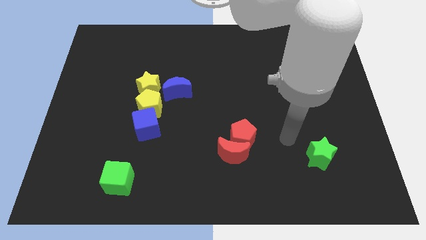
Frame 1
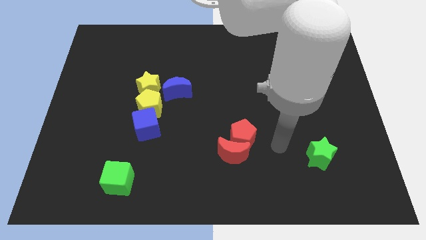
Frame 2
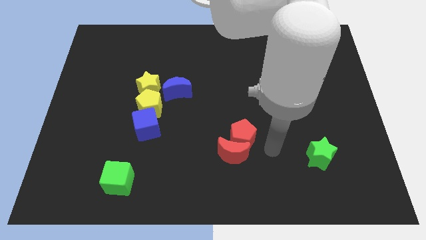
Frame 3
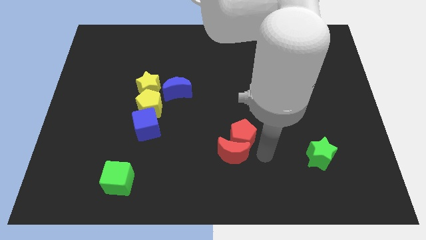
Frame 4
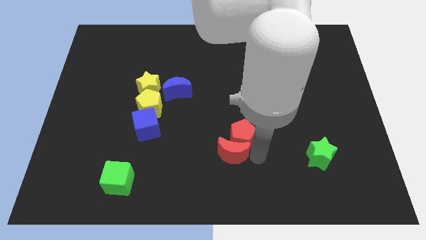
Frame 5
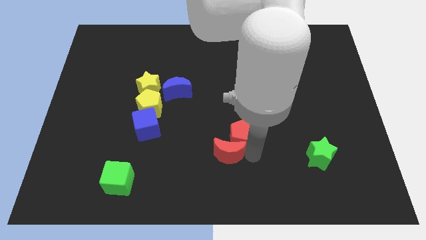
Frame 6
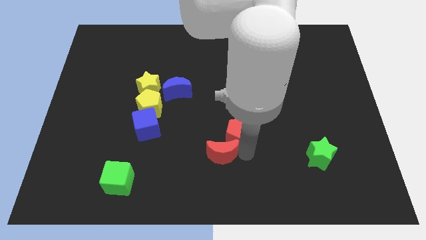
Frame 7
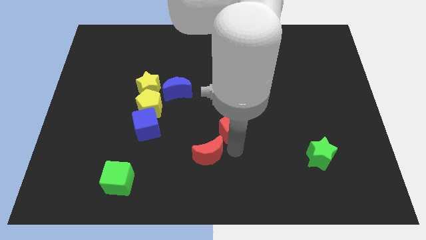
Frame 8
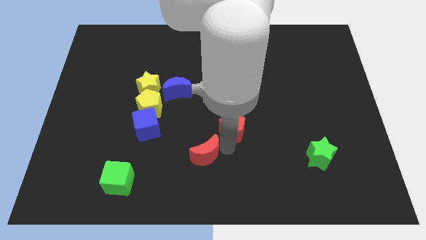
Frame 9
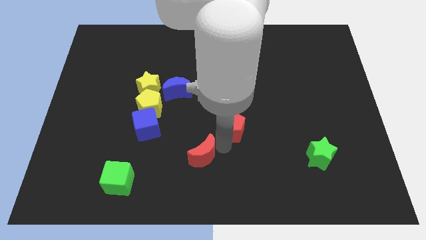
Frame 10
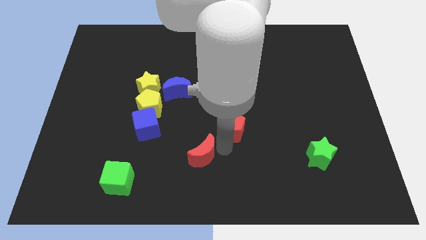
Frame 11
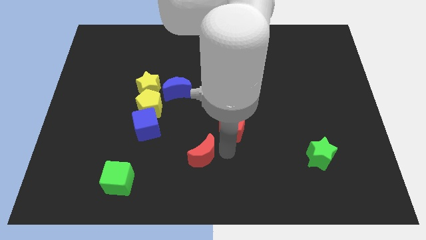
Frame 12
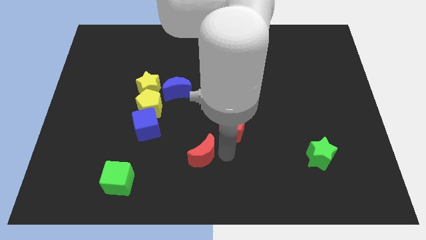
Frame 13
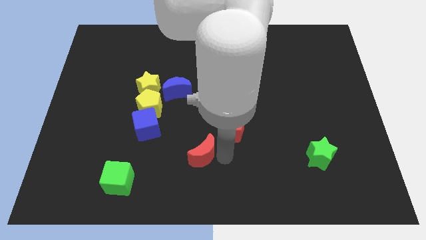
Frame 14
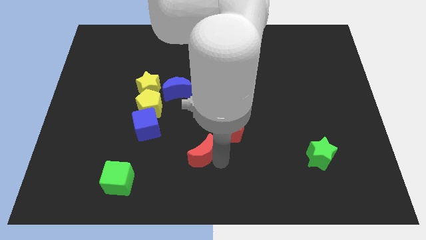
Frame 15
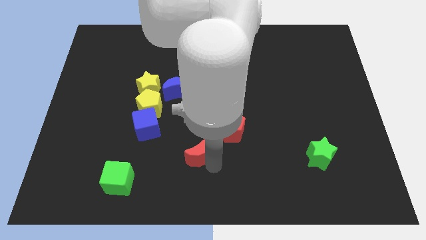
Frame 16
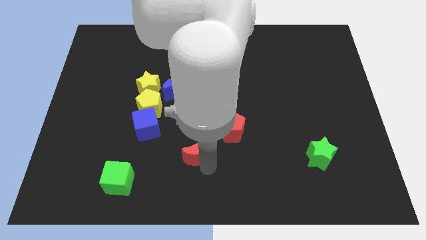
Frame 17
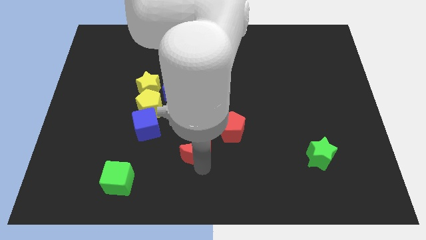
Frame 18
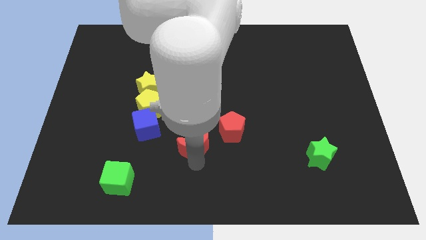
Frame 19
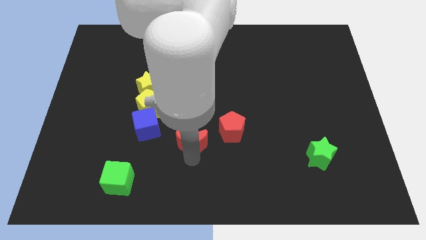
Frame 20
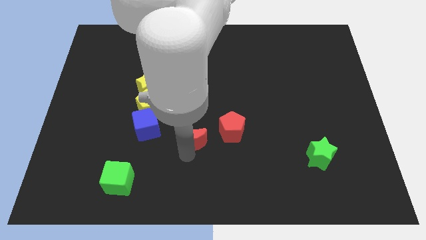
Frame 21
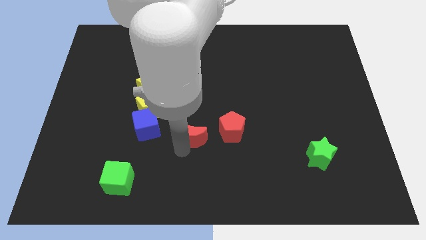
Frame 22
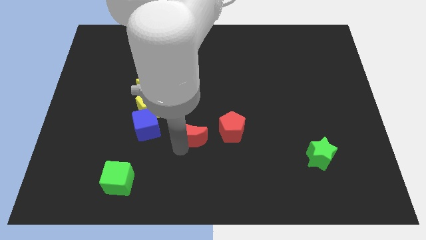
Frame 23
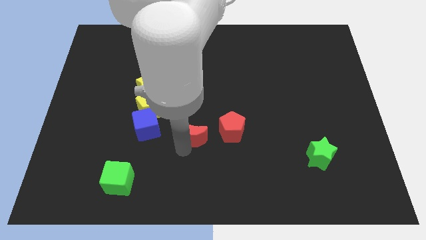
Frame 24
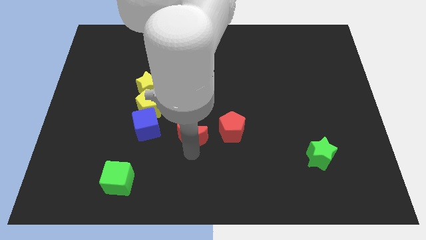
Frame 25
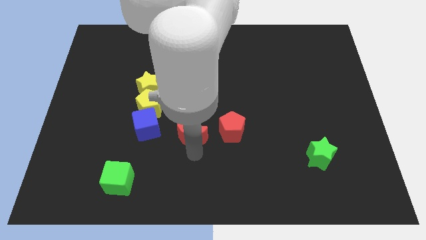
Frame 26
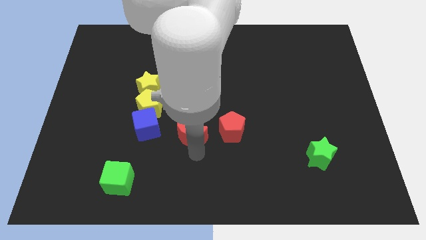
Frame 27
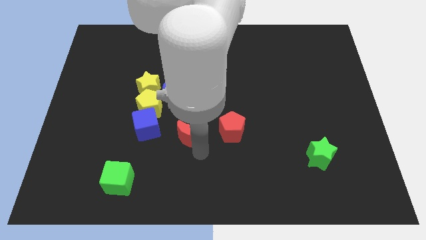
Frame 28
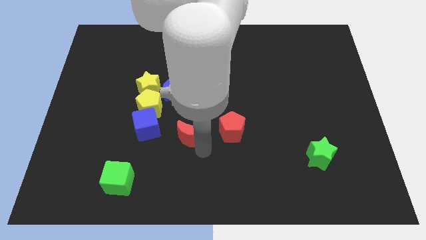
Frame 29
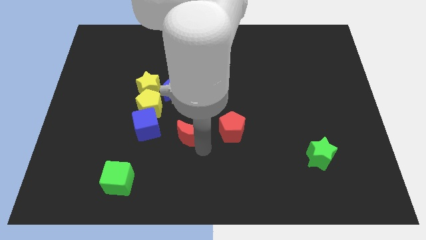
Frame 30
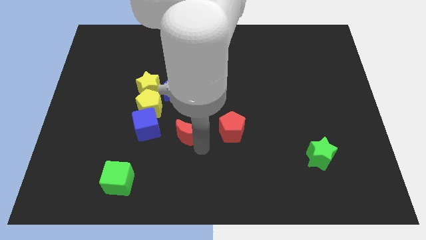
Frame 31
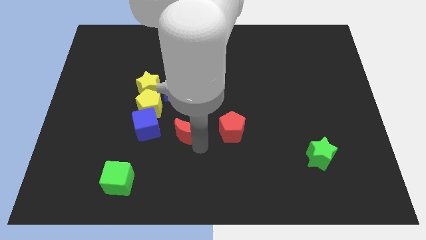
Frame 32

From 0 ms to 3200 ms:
separate the red crescent and red pentagon

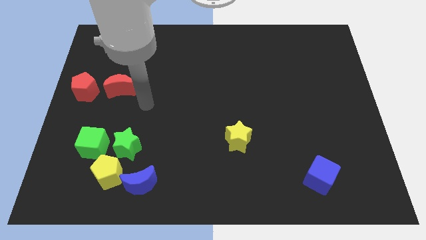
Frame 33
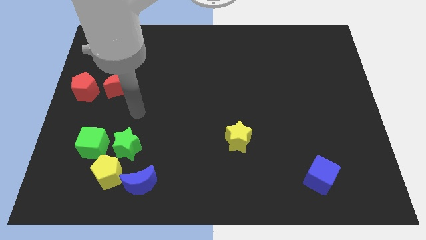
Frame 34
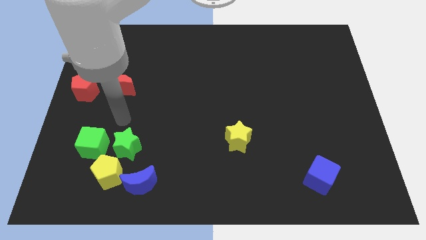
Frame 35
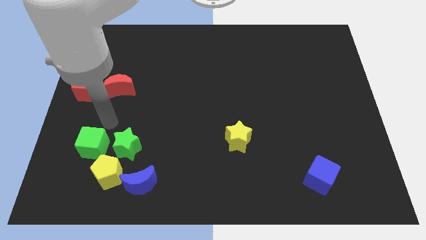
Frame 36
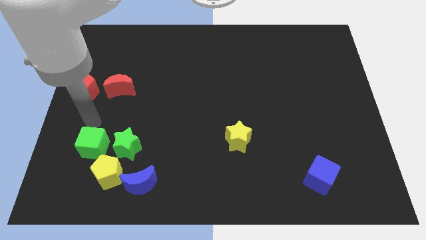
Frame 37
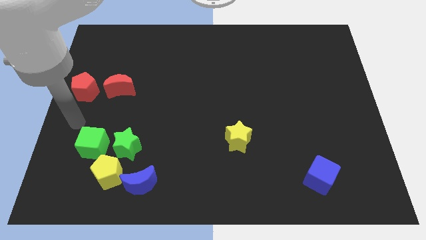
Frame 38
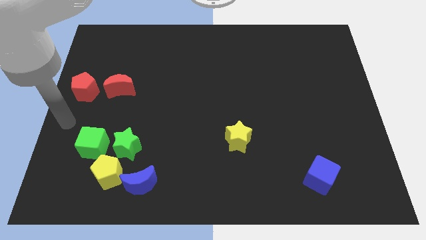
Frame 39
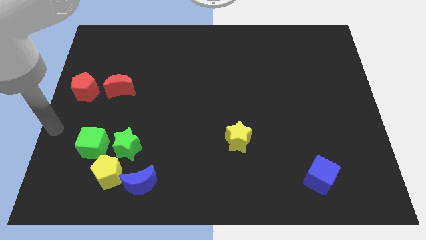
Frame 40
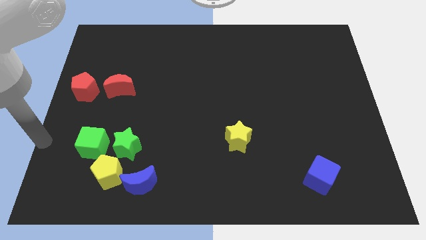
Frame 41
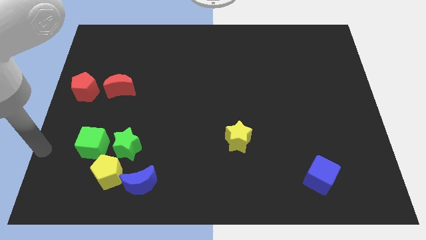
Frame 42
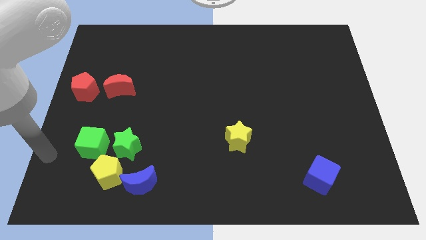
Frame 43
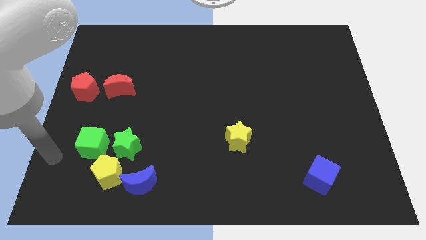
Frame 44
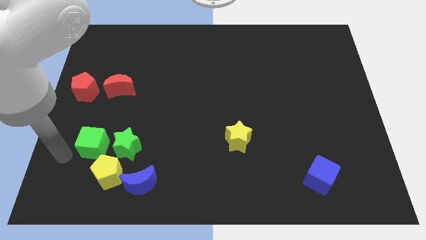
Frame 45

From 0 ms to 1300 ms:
point your arm at the left of the green cube

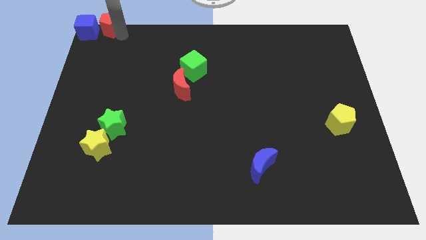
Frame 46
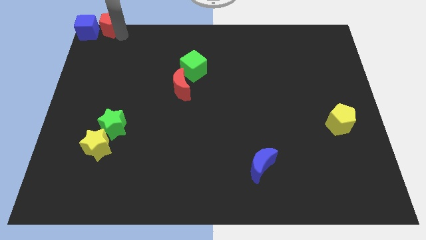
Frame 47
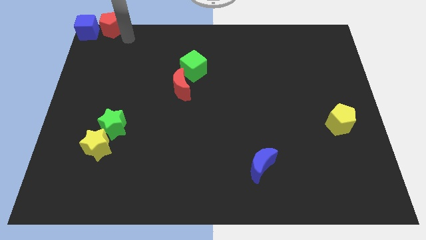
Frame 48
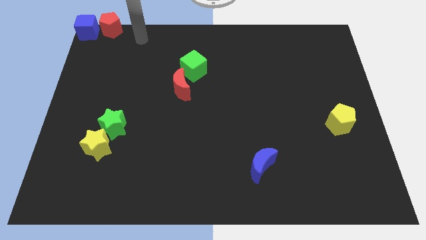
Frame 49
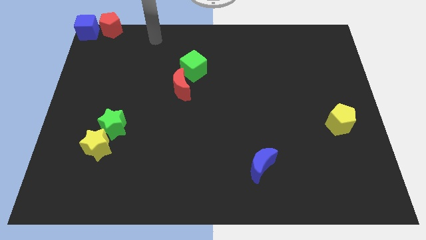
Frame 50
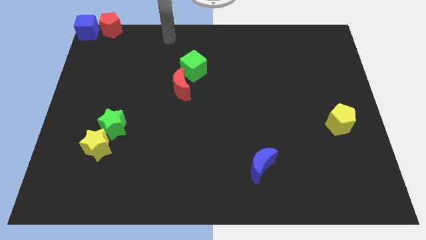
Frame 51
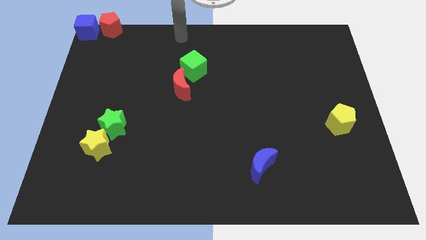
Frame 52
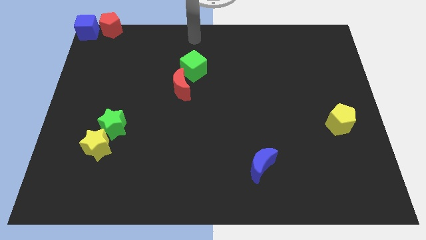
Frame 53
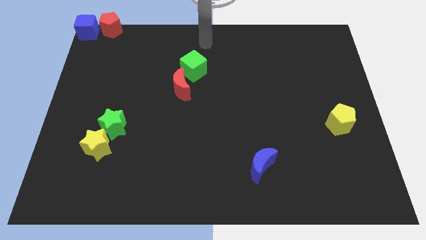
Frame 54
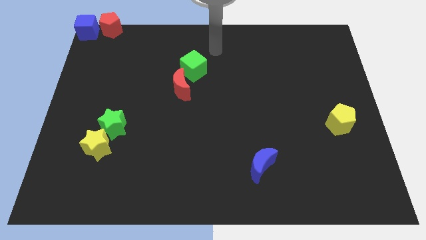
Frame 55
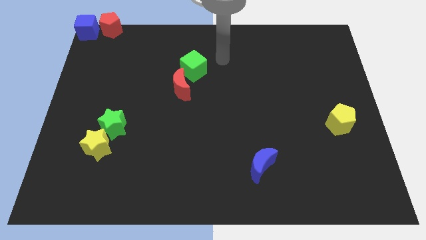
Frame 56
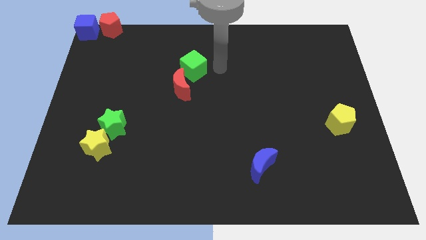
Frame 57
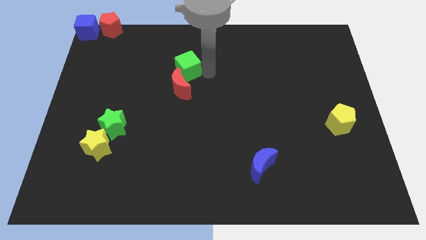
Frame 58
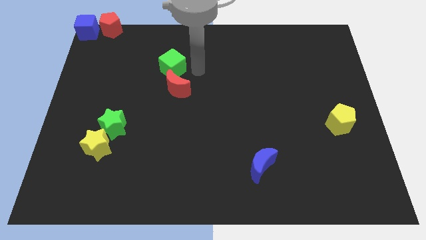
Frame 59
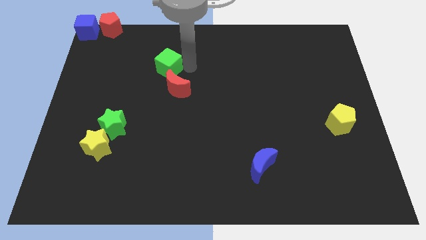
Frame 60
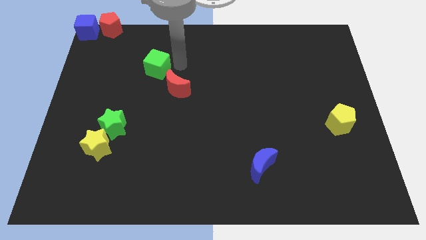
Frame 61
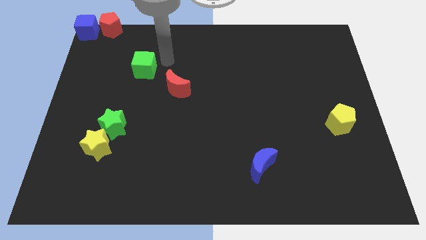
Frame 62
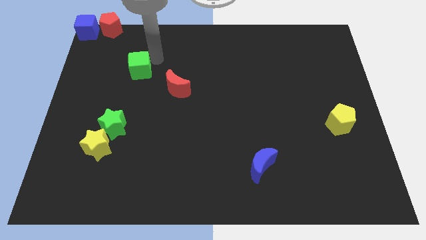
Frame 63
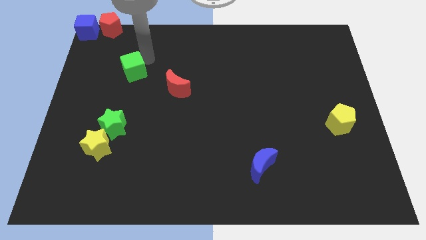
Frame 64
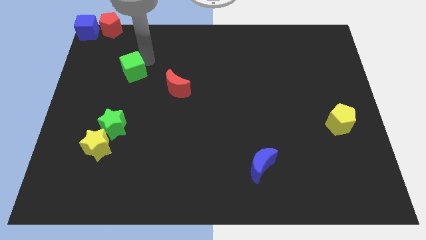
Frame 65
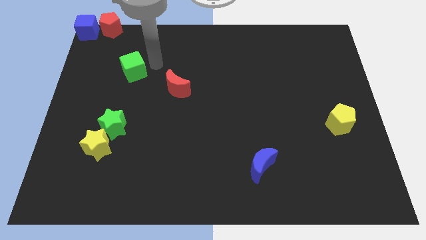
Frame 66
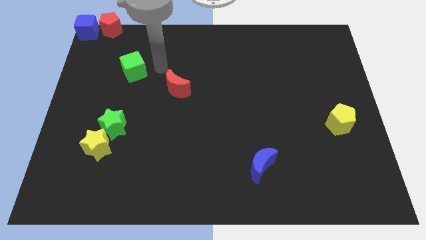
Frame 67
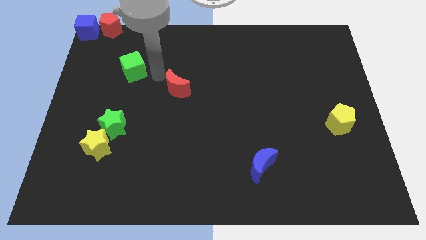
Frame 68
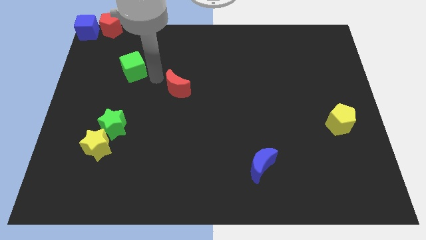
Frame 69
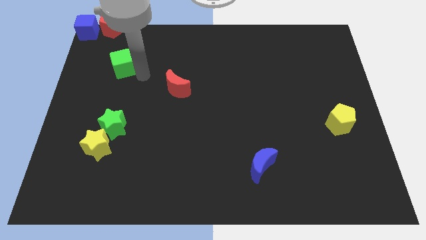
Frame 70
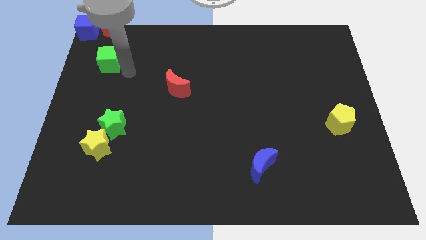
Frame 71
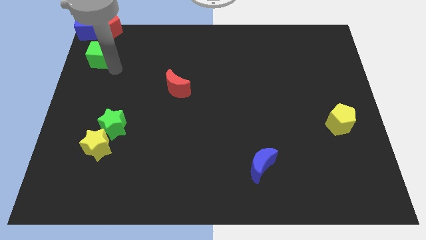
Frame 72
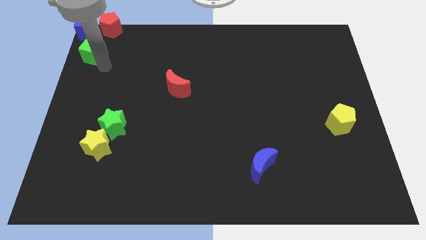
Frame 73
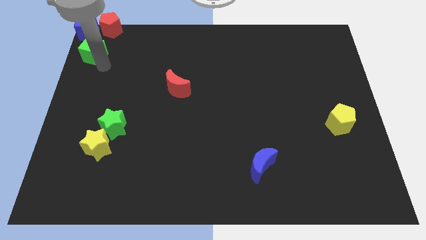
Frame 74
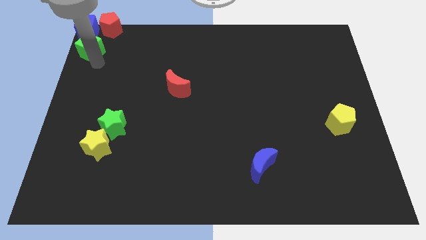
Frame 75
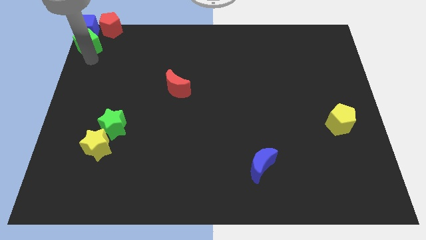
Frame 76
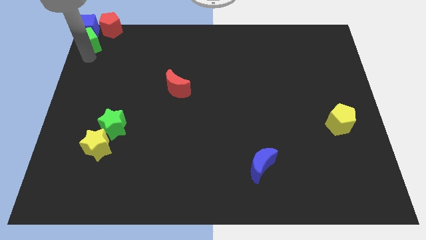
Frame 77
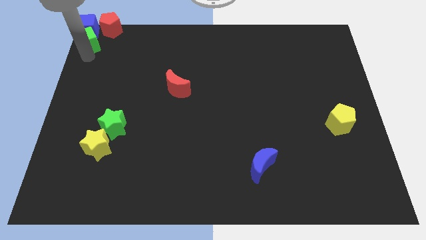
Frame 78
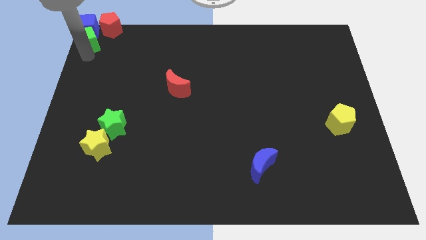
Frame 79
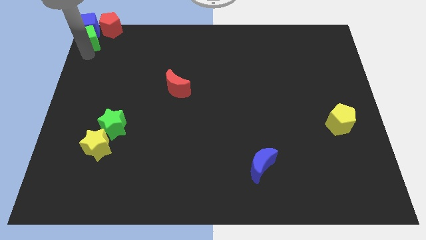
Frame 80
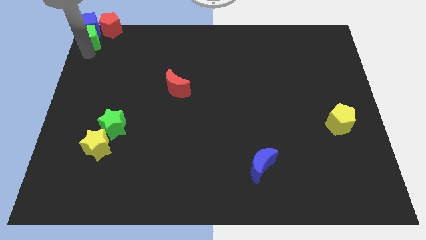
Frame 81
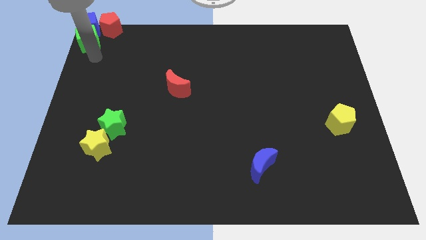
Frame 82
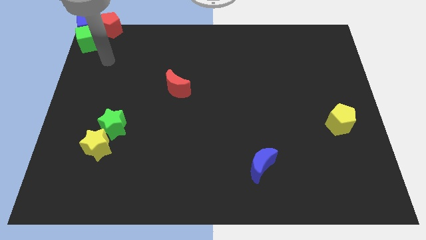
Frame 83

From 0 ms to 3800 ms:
move green cube into blue cube

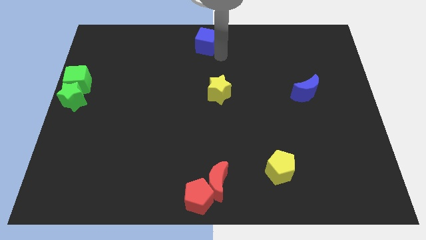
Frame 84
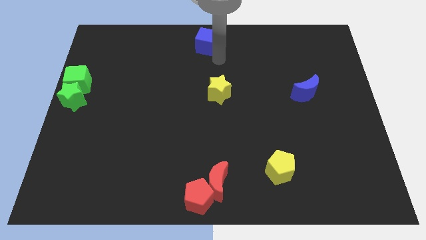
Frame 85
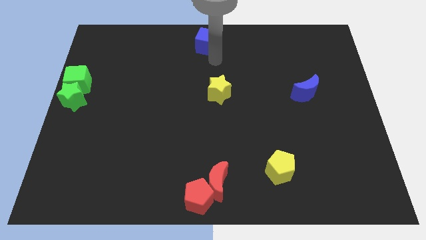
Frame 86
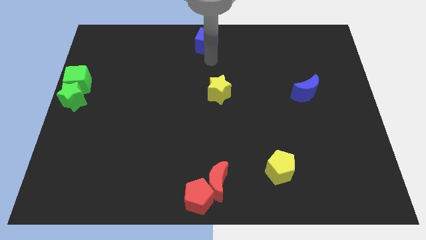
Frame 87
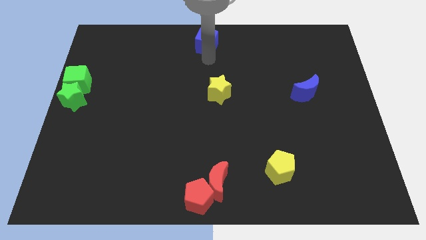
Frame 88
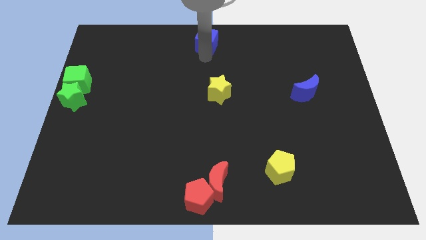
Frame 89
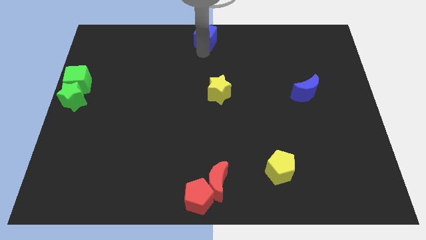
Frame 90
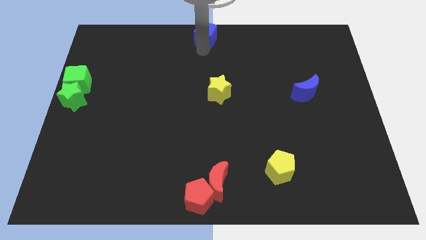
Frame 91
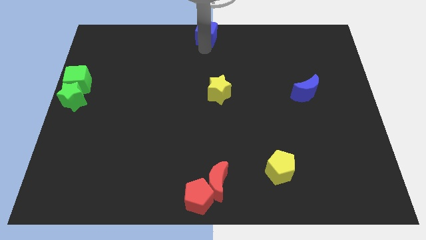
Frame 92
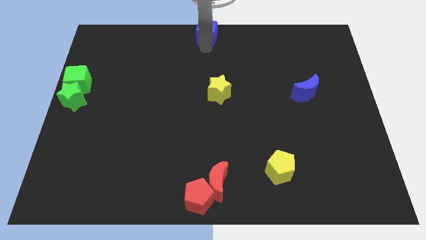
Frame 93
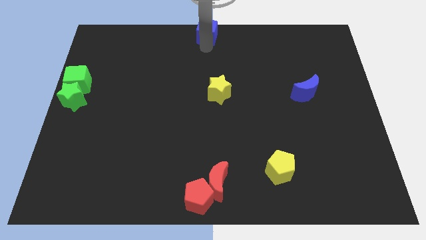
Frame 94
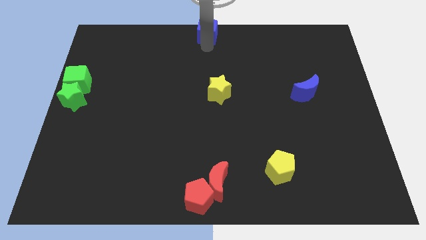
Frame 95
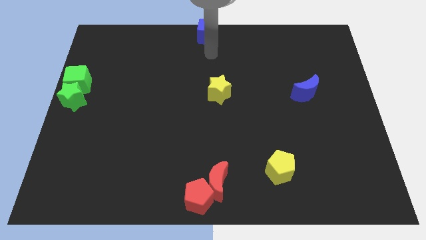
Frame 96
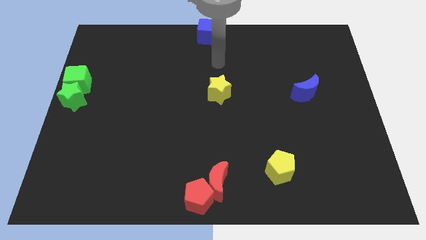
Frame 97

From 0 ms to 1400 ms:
place blue cube towards top center of the board
